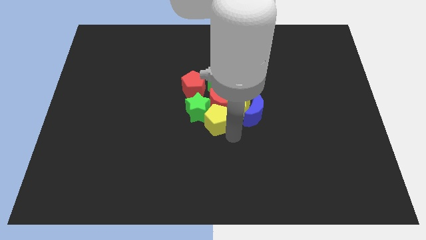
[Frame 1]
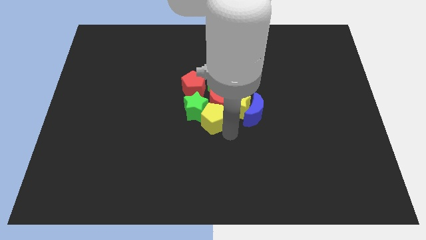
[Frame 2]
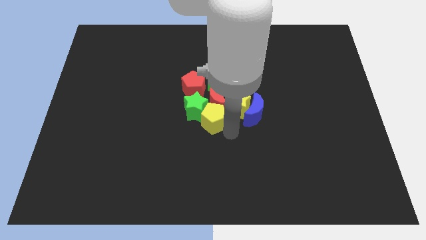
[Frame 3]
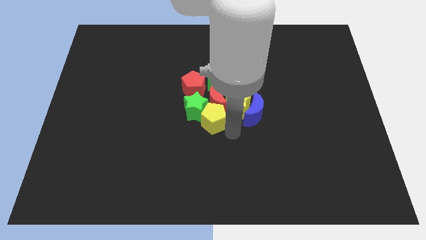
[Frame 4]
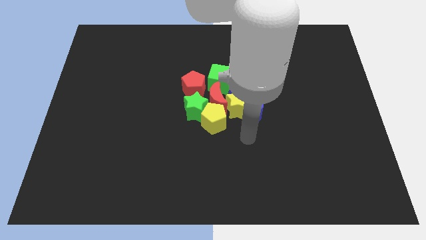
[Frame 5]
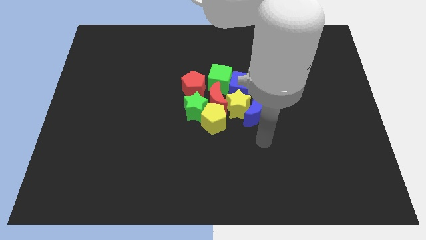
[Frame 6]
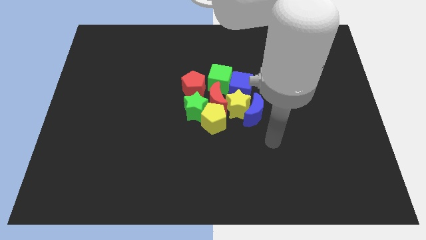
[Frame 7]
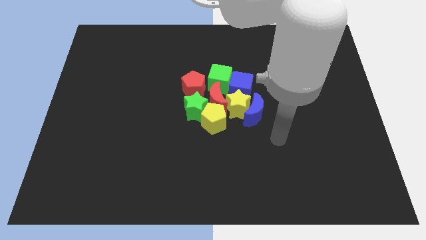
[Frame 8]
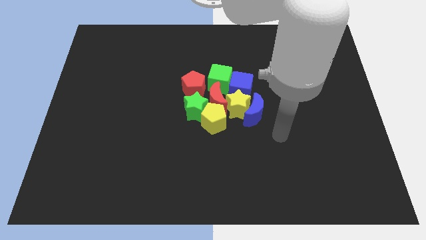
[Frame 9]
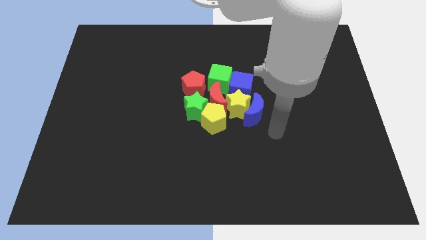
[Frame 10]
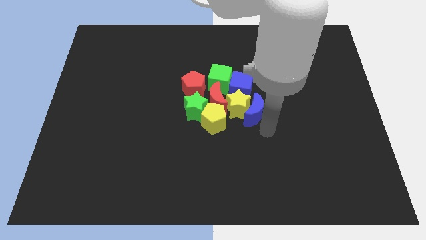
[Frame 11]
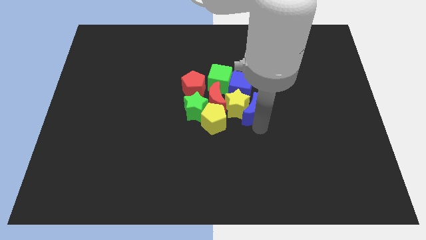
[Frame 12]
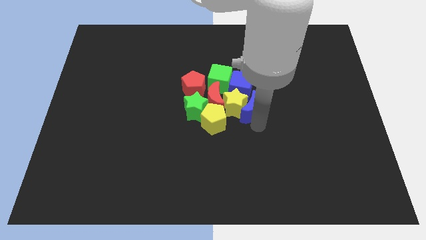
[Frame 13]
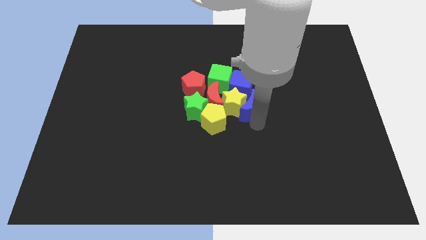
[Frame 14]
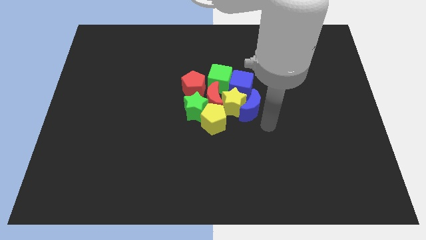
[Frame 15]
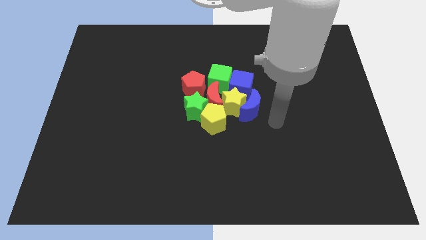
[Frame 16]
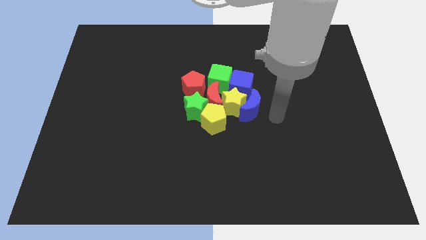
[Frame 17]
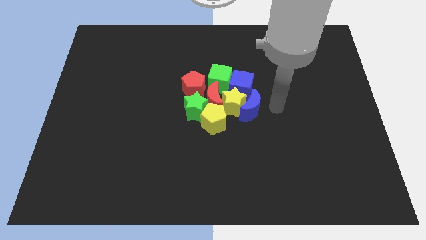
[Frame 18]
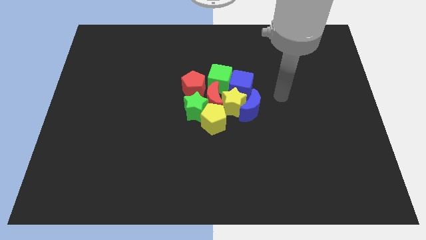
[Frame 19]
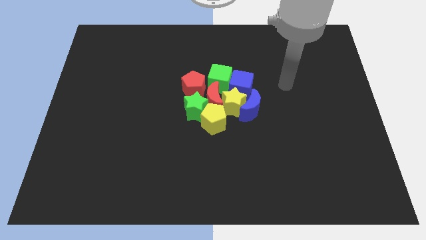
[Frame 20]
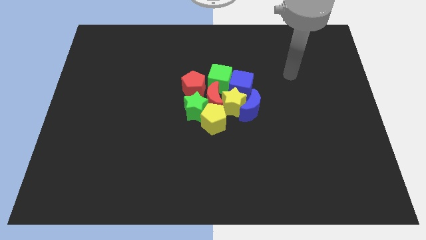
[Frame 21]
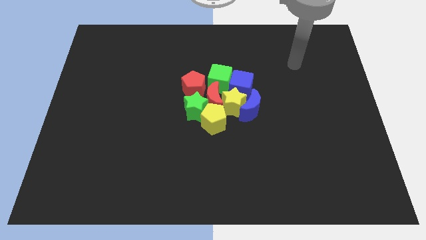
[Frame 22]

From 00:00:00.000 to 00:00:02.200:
place the yellow penatgon to right side of the green star

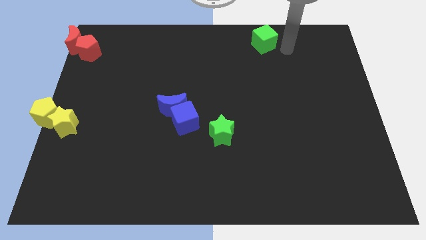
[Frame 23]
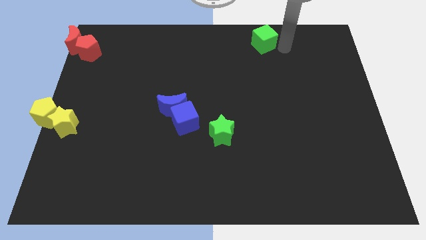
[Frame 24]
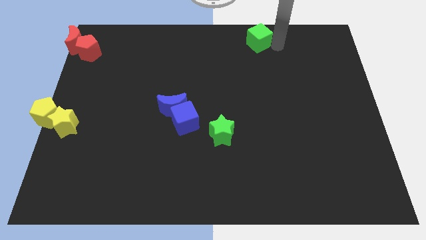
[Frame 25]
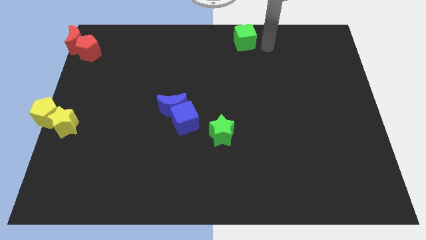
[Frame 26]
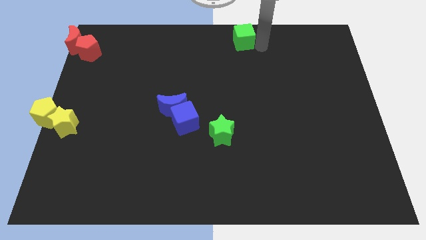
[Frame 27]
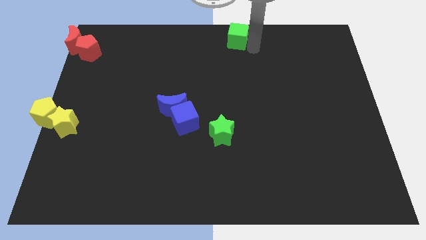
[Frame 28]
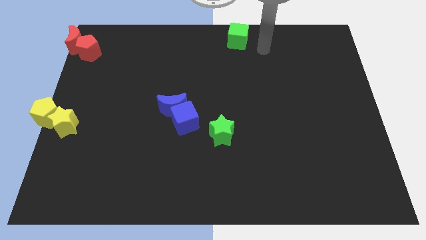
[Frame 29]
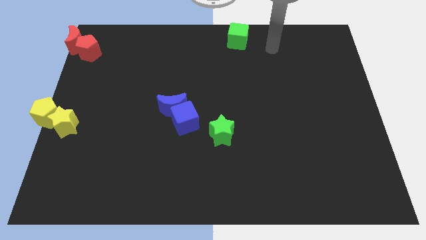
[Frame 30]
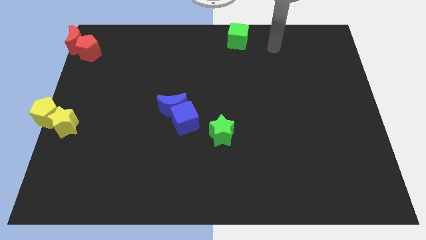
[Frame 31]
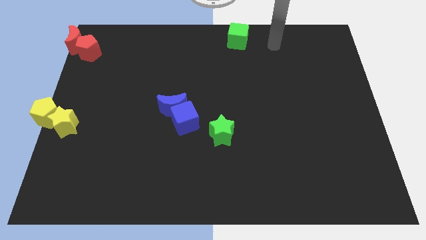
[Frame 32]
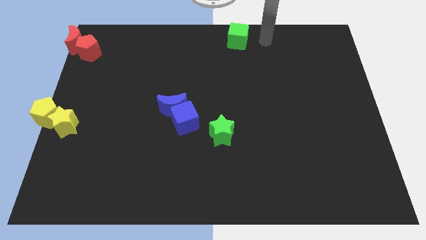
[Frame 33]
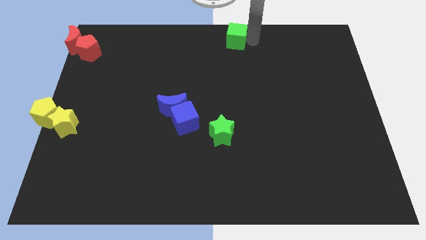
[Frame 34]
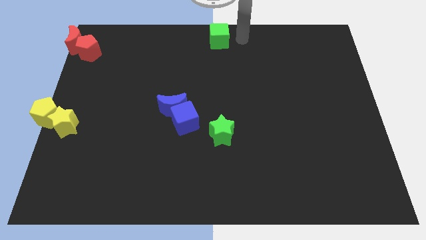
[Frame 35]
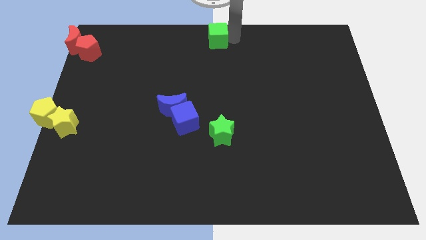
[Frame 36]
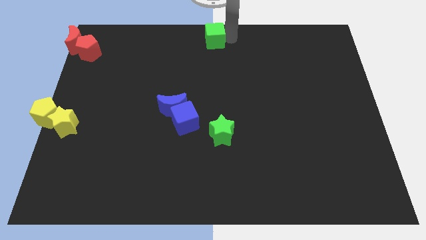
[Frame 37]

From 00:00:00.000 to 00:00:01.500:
push the green cube to the top center

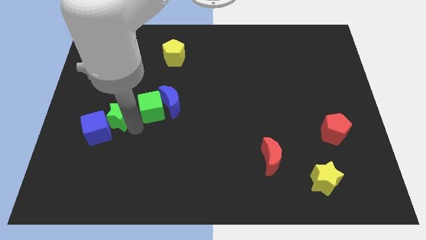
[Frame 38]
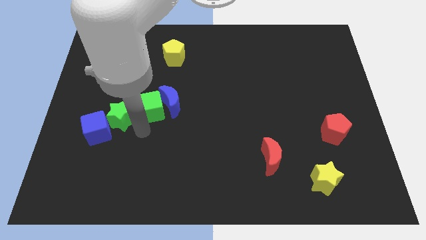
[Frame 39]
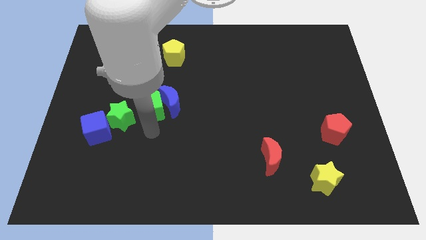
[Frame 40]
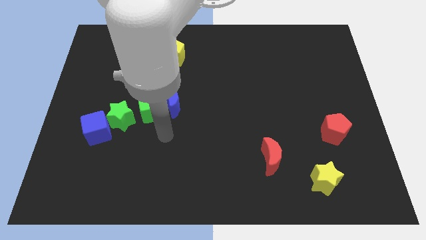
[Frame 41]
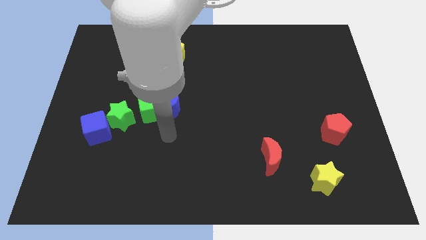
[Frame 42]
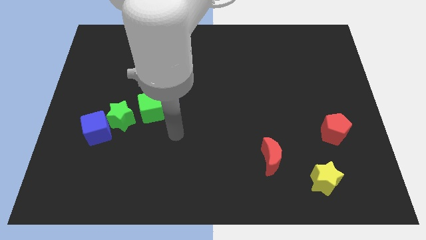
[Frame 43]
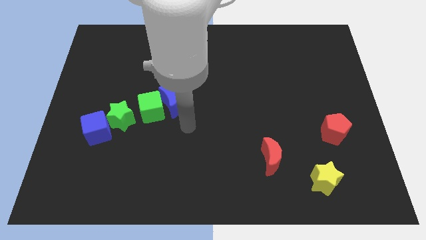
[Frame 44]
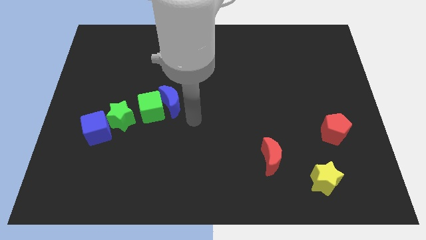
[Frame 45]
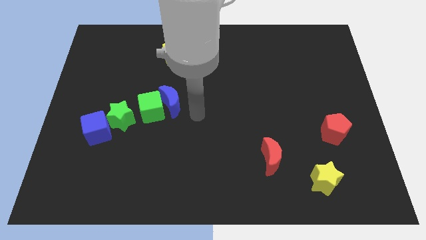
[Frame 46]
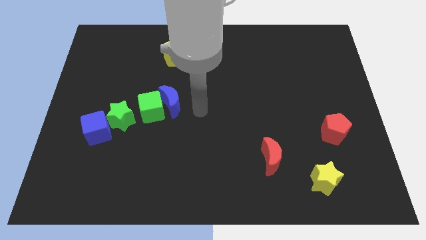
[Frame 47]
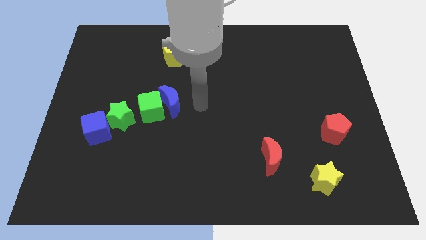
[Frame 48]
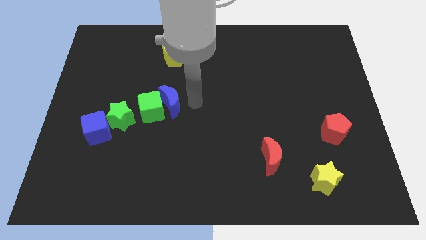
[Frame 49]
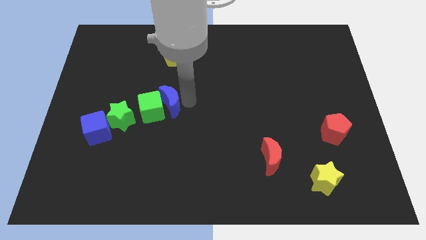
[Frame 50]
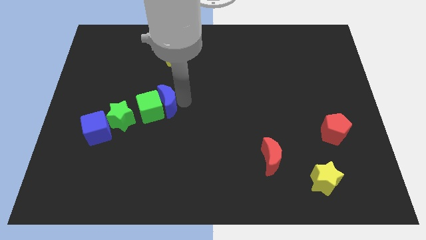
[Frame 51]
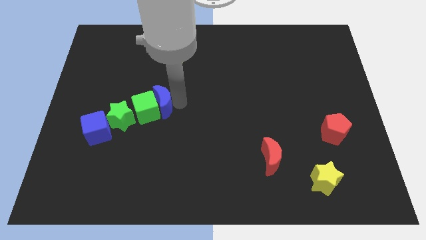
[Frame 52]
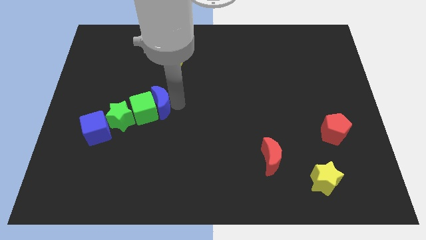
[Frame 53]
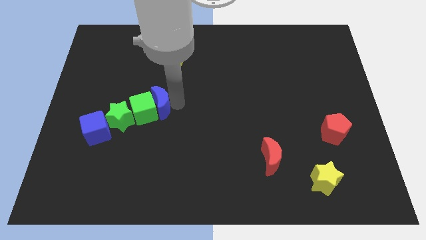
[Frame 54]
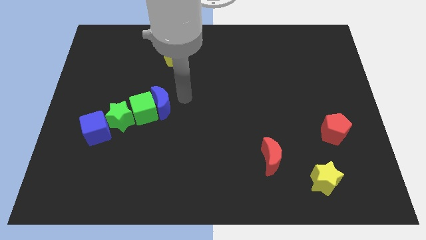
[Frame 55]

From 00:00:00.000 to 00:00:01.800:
push the blue crescent into the green cube

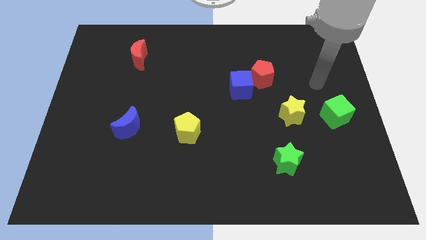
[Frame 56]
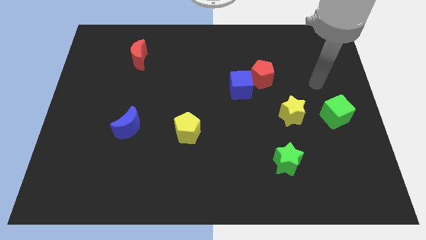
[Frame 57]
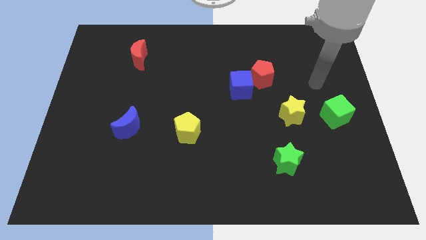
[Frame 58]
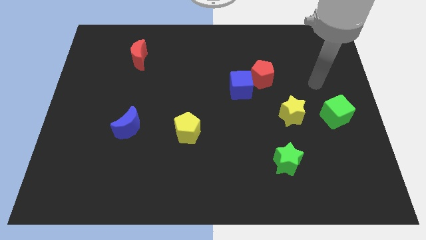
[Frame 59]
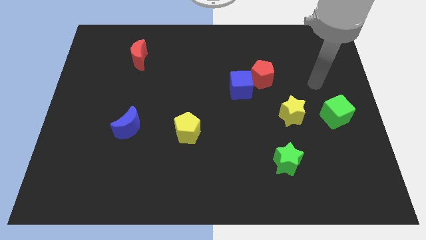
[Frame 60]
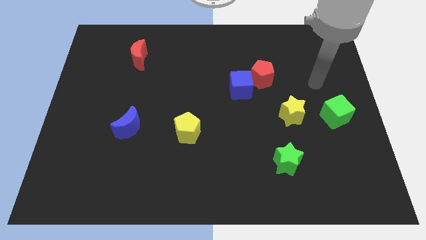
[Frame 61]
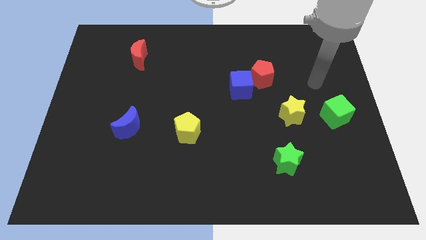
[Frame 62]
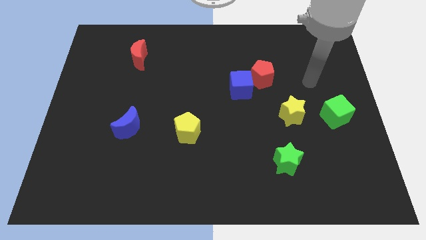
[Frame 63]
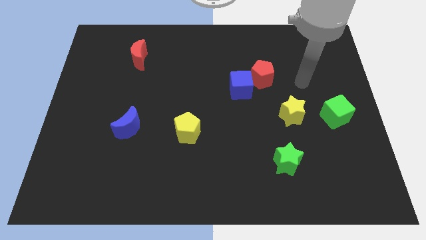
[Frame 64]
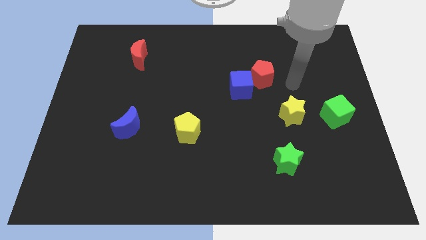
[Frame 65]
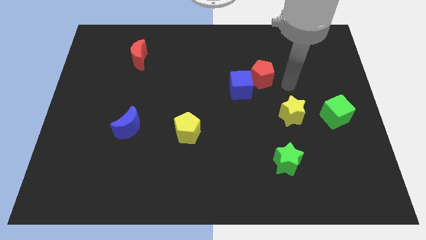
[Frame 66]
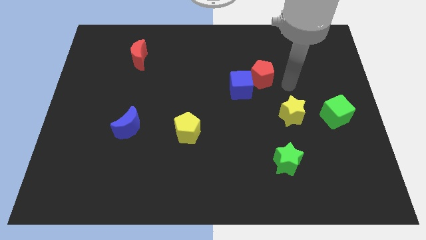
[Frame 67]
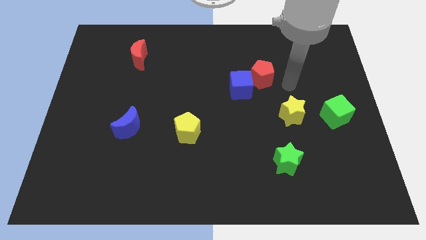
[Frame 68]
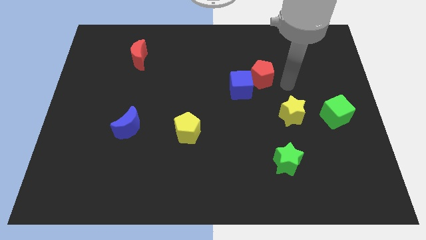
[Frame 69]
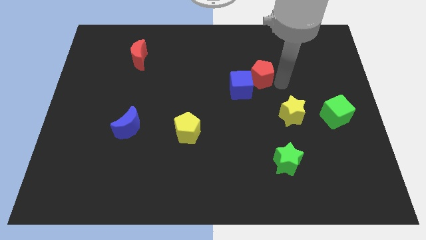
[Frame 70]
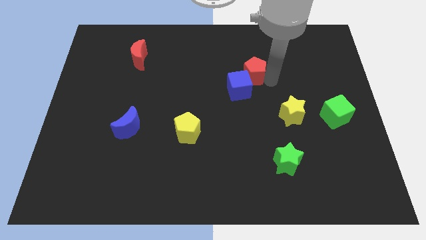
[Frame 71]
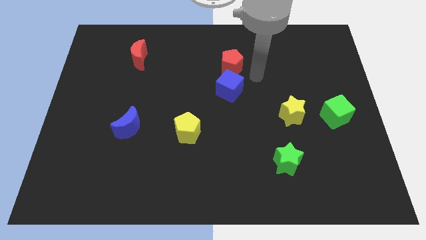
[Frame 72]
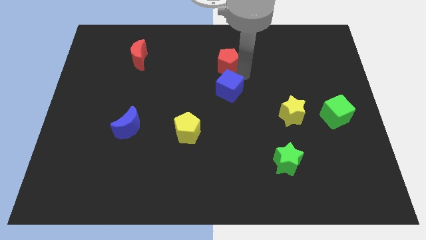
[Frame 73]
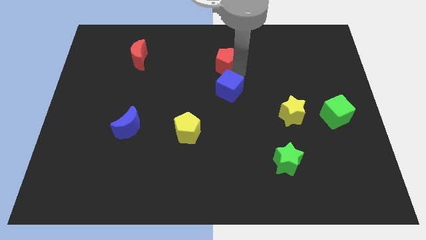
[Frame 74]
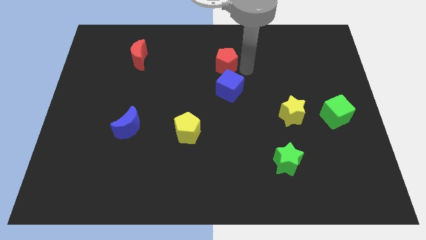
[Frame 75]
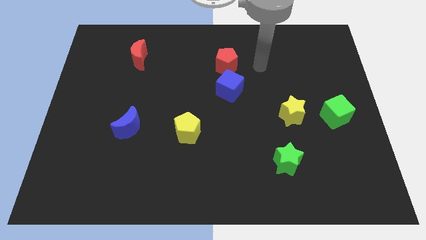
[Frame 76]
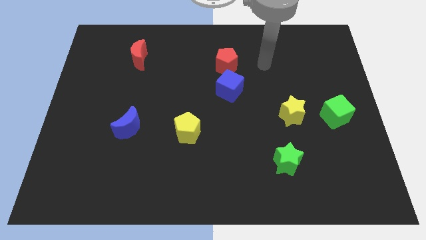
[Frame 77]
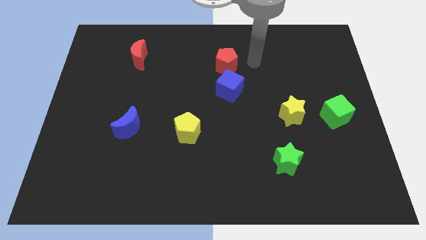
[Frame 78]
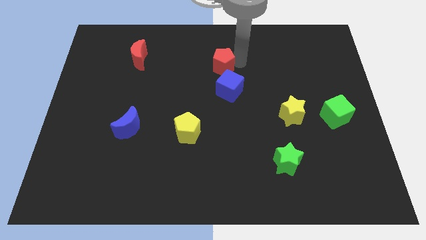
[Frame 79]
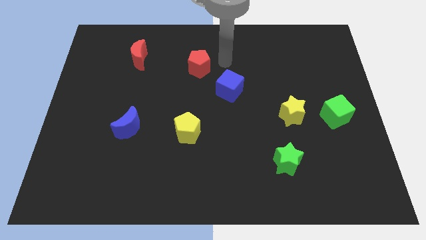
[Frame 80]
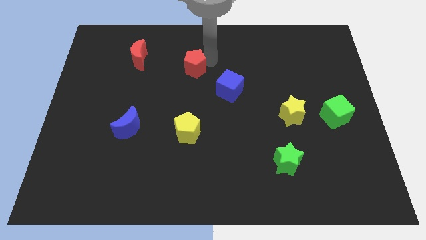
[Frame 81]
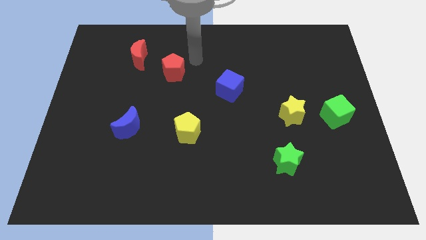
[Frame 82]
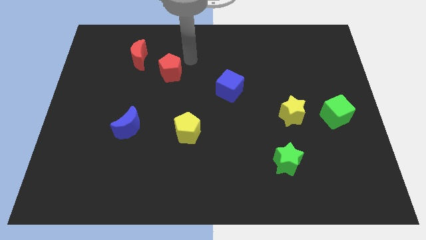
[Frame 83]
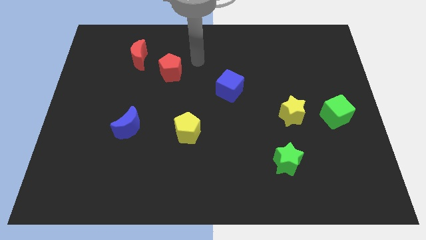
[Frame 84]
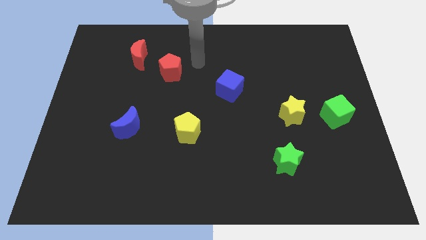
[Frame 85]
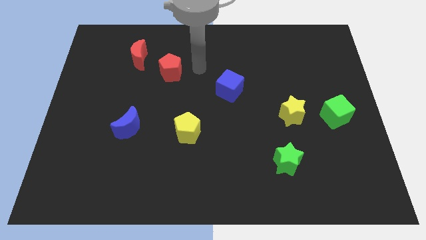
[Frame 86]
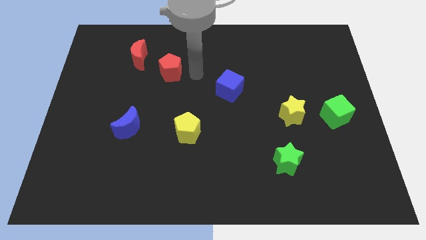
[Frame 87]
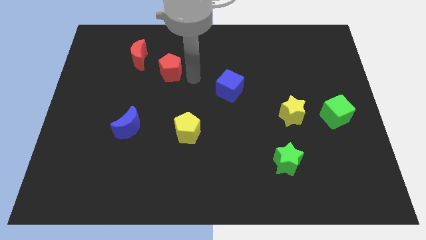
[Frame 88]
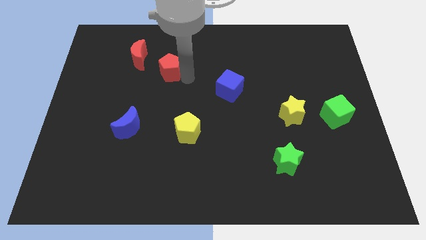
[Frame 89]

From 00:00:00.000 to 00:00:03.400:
place the red pentagon above the blue moon

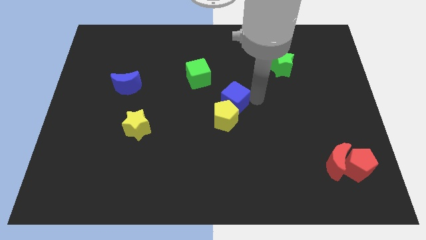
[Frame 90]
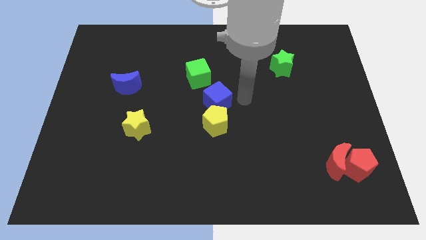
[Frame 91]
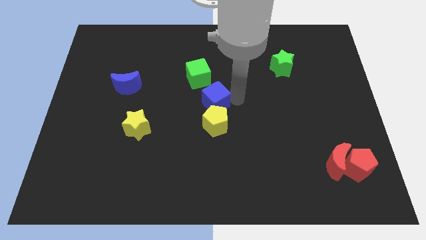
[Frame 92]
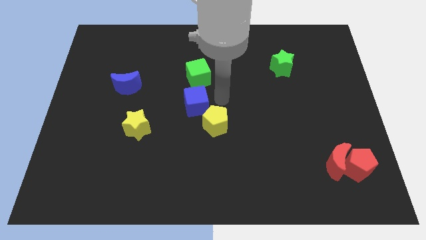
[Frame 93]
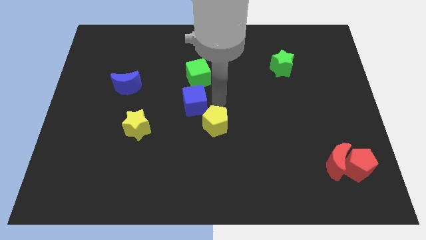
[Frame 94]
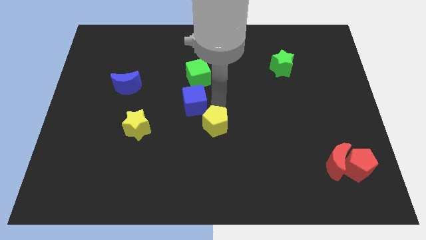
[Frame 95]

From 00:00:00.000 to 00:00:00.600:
separate the blue cube and yellow pentagon
